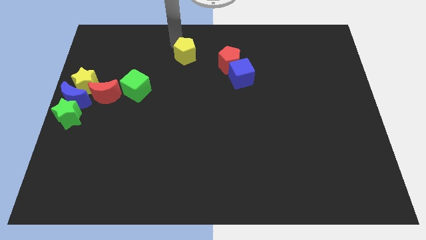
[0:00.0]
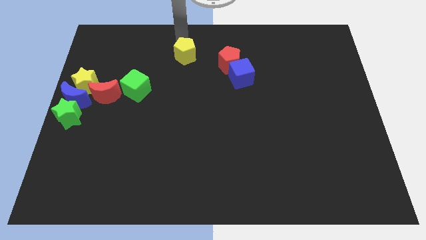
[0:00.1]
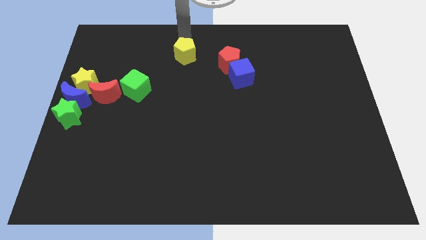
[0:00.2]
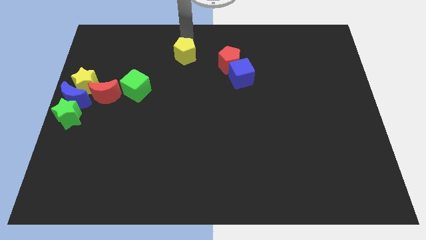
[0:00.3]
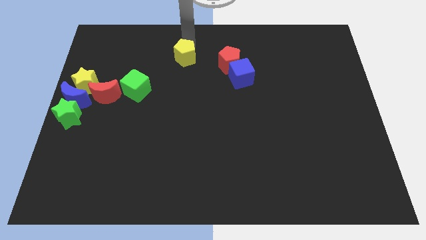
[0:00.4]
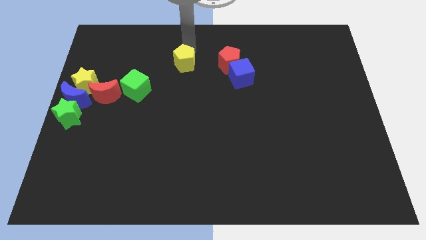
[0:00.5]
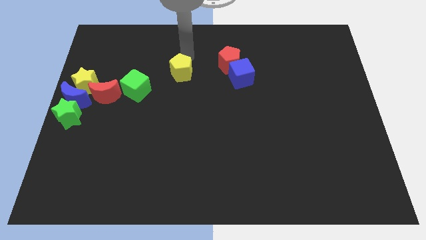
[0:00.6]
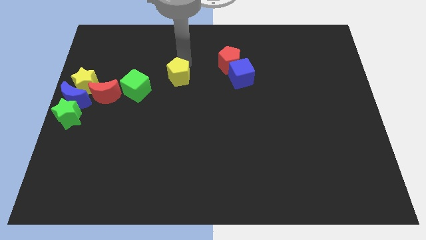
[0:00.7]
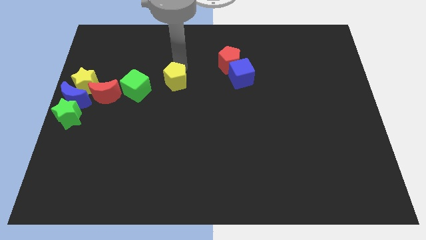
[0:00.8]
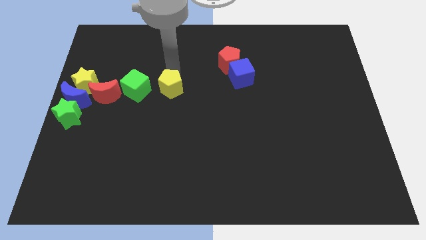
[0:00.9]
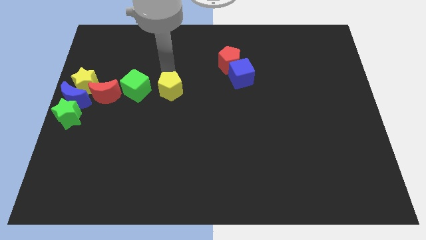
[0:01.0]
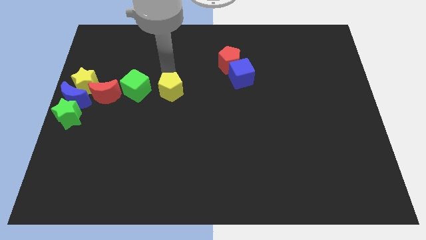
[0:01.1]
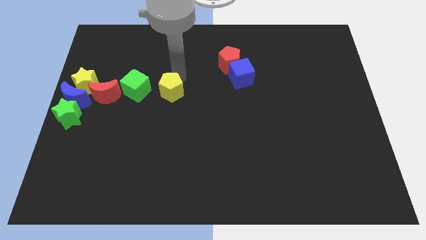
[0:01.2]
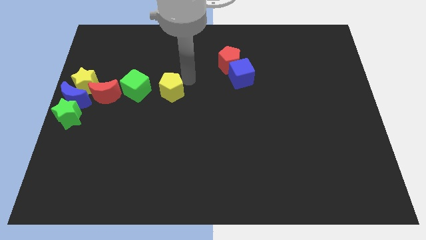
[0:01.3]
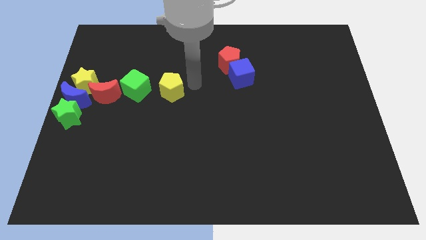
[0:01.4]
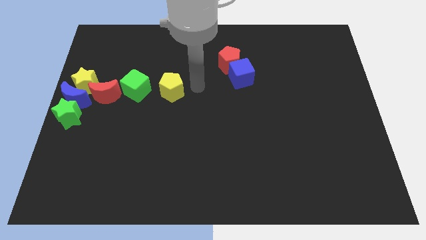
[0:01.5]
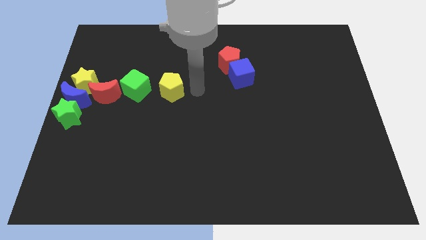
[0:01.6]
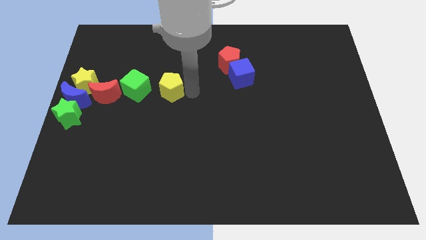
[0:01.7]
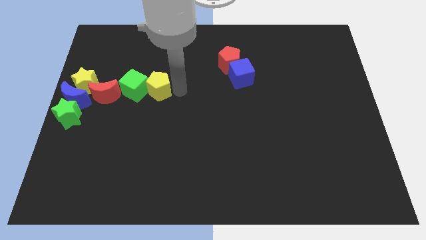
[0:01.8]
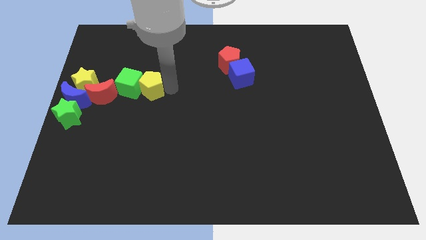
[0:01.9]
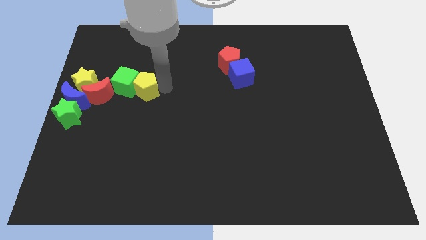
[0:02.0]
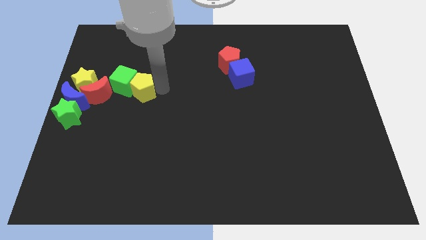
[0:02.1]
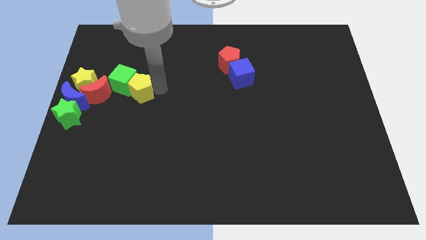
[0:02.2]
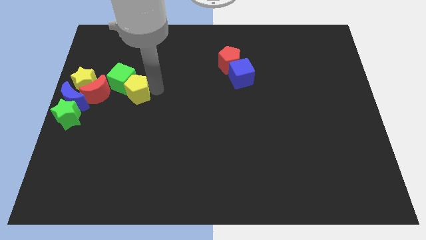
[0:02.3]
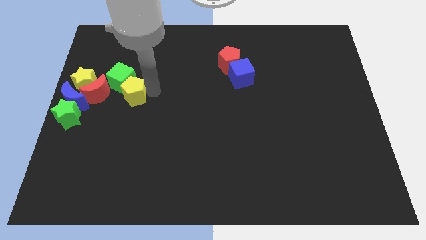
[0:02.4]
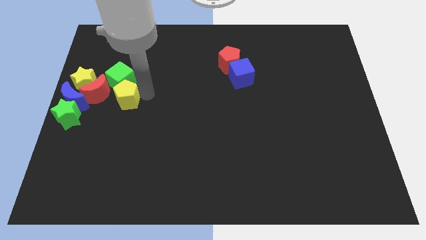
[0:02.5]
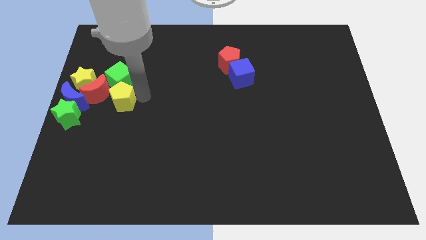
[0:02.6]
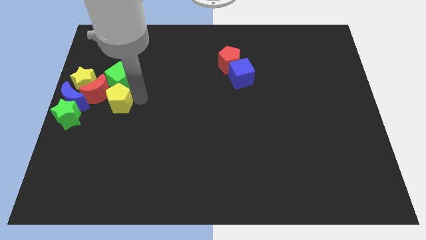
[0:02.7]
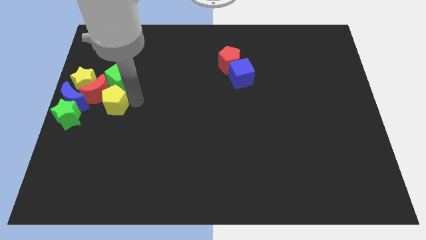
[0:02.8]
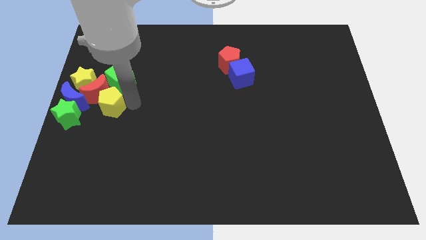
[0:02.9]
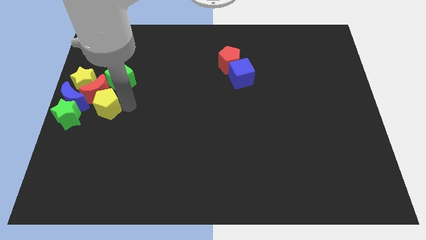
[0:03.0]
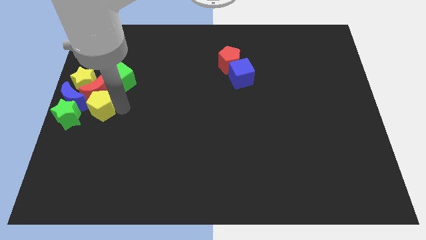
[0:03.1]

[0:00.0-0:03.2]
place the yellow pentagon below to the green cube

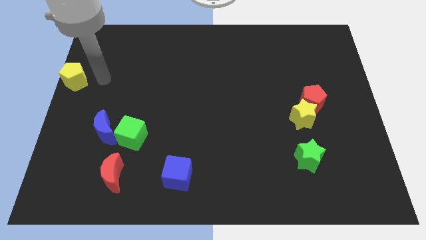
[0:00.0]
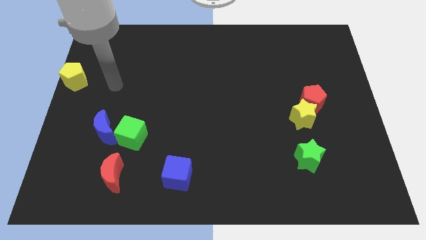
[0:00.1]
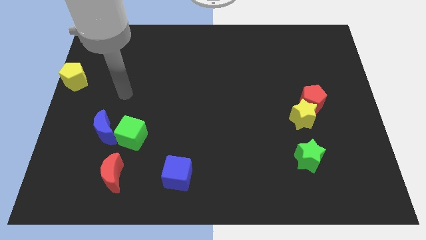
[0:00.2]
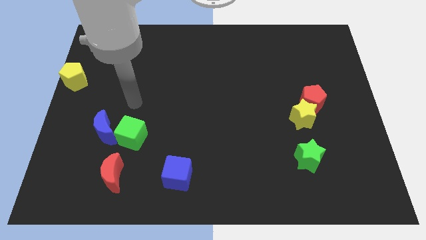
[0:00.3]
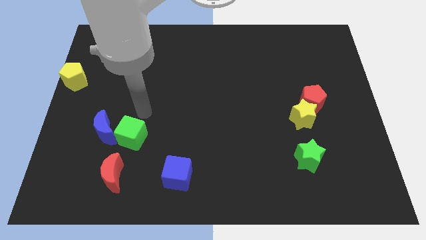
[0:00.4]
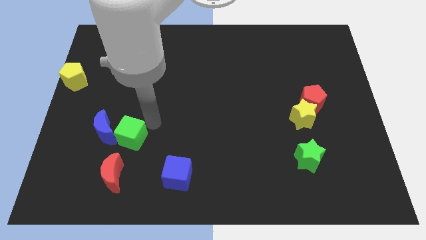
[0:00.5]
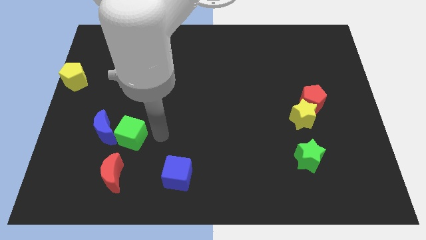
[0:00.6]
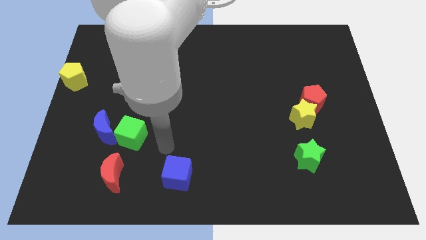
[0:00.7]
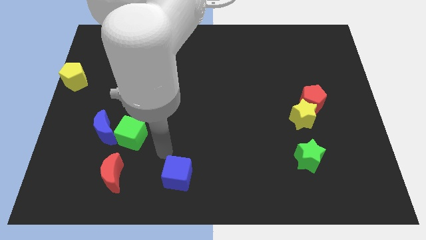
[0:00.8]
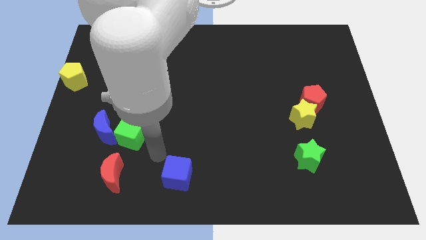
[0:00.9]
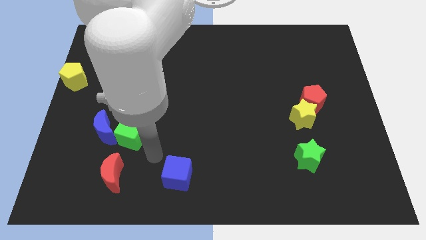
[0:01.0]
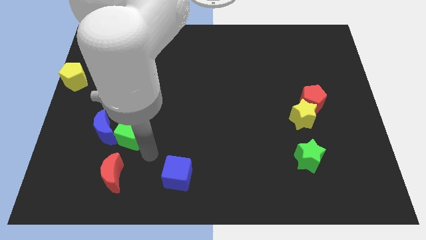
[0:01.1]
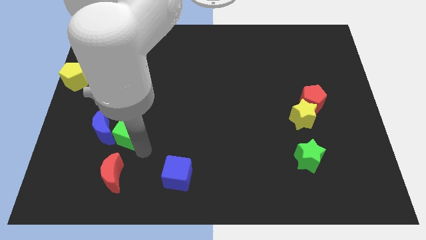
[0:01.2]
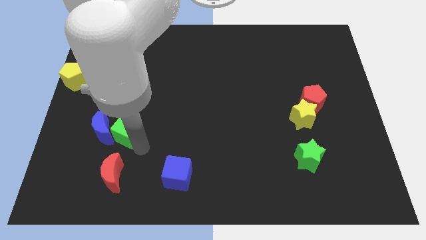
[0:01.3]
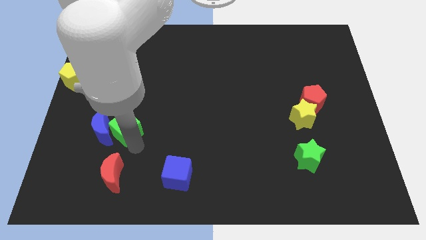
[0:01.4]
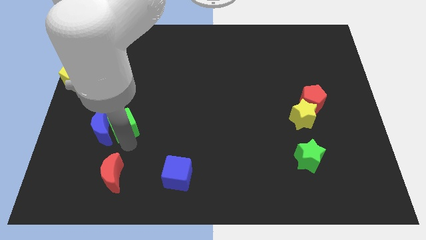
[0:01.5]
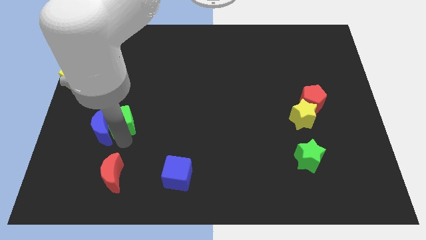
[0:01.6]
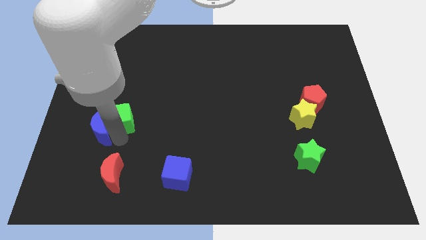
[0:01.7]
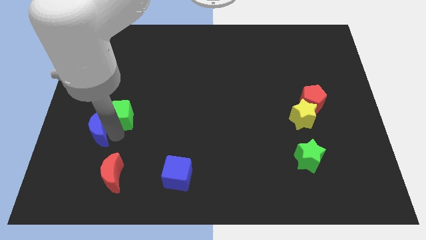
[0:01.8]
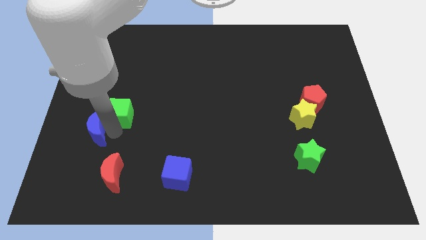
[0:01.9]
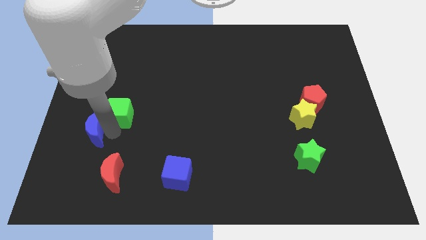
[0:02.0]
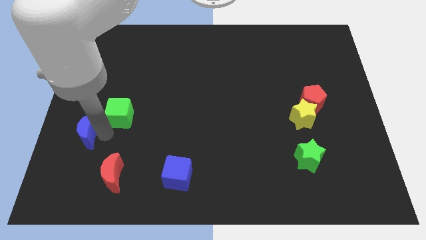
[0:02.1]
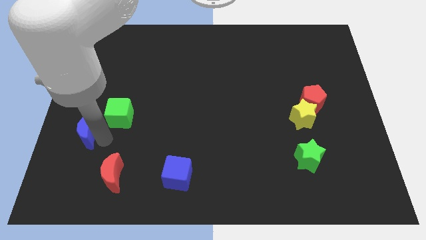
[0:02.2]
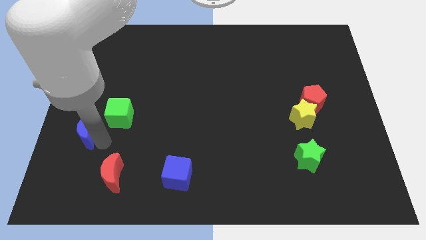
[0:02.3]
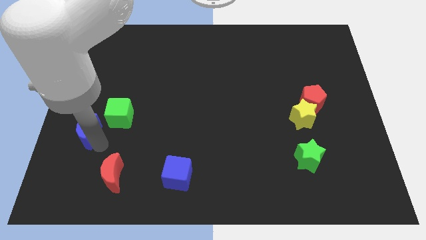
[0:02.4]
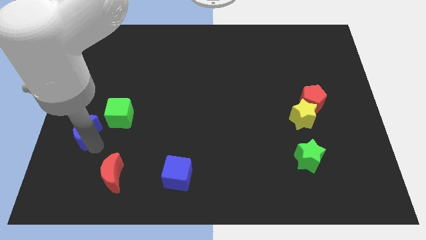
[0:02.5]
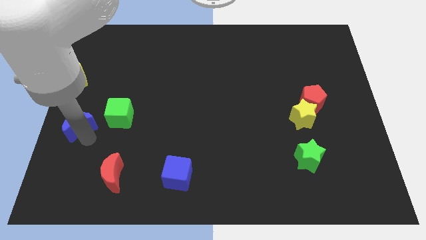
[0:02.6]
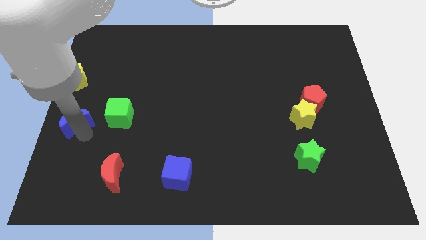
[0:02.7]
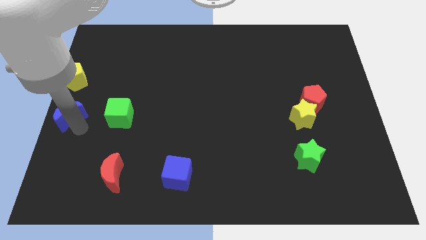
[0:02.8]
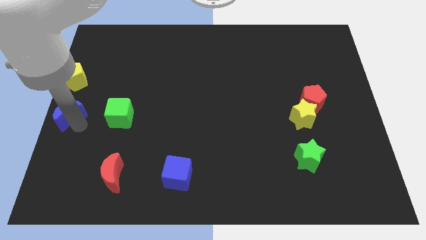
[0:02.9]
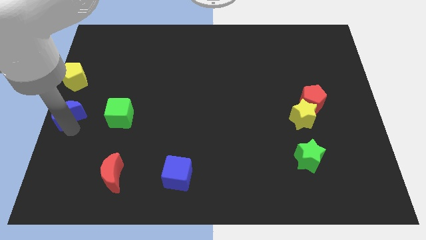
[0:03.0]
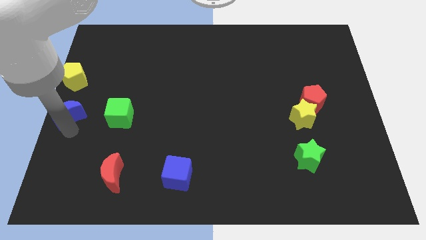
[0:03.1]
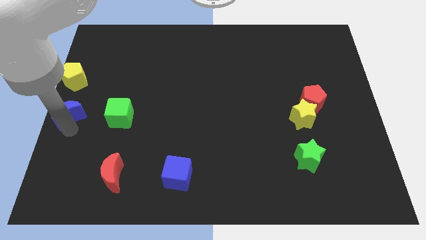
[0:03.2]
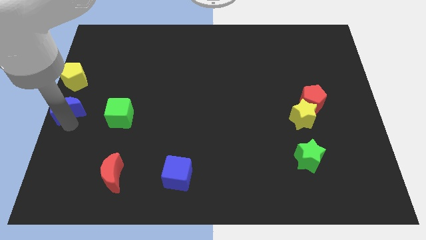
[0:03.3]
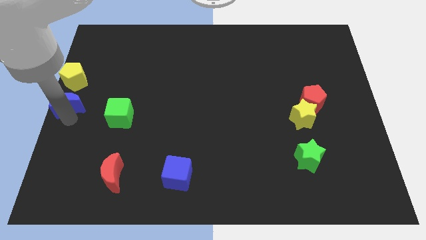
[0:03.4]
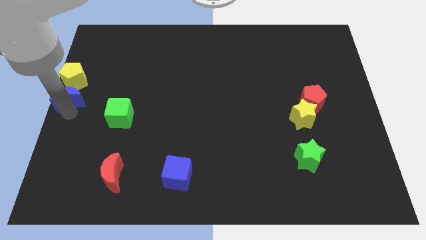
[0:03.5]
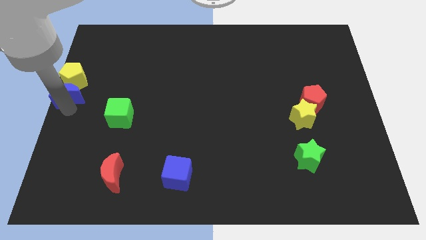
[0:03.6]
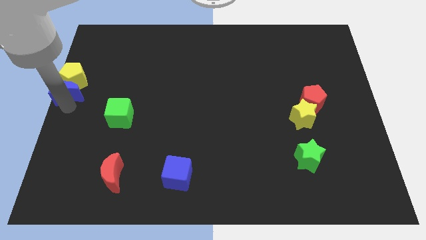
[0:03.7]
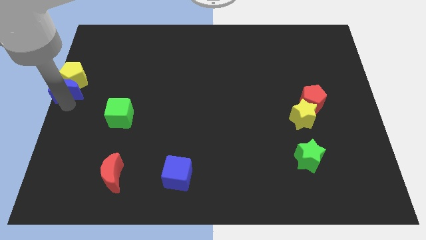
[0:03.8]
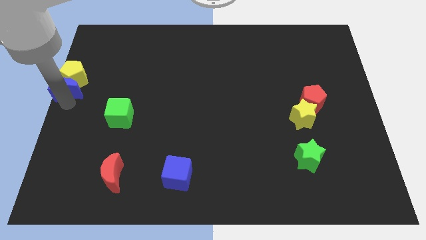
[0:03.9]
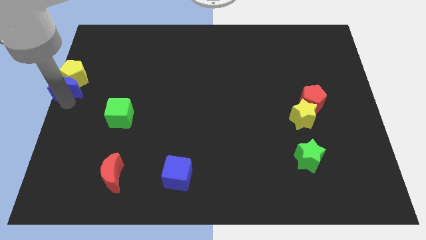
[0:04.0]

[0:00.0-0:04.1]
move blue moon apart from the green cube

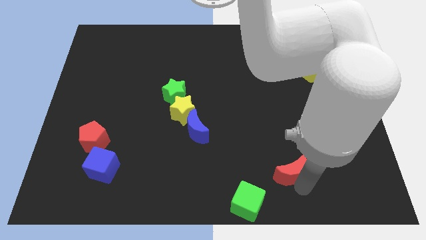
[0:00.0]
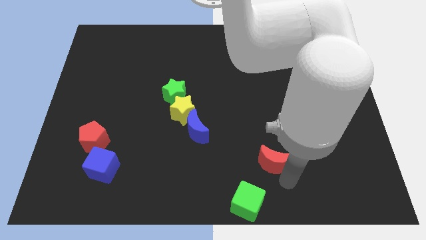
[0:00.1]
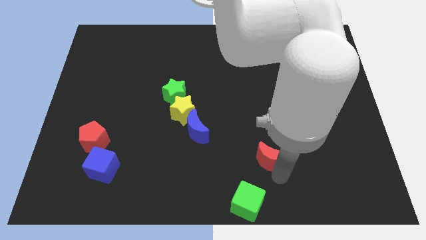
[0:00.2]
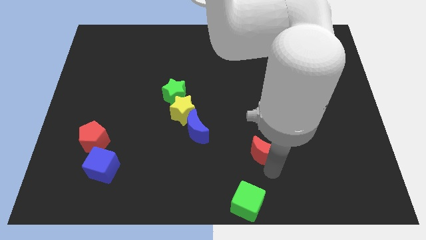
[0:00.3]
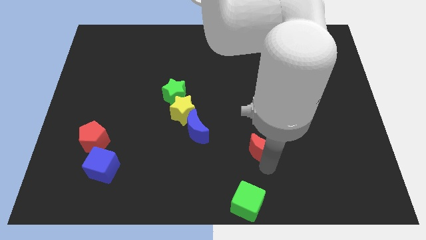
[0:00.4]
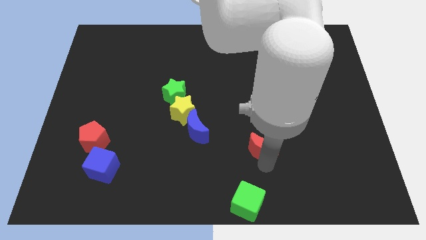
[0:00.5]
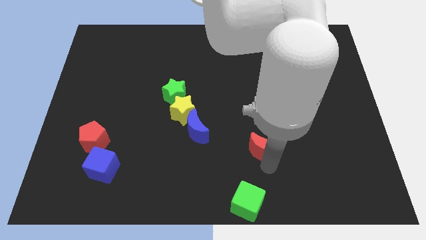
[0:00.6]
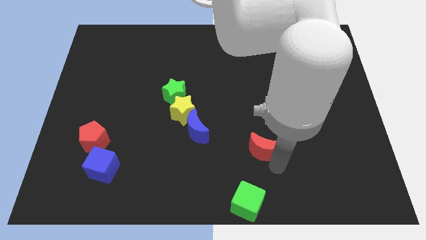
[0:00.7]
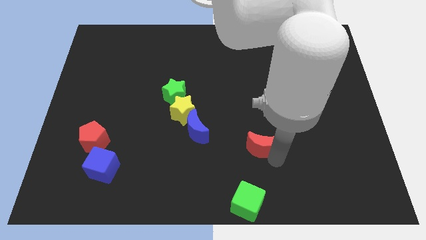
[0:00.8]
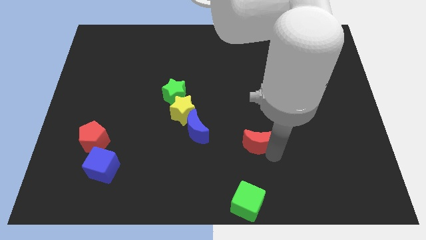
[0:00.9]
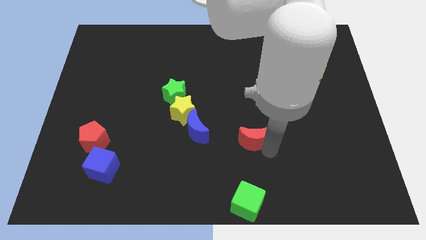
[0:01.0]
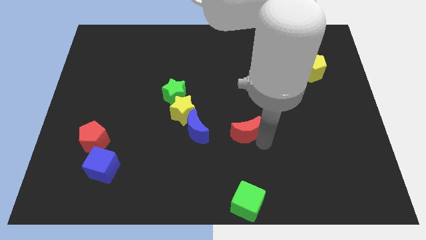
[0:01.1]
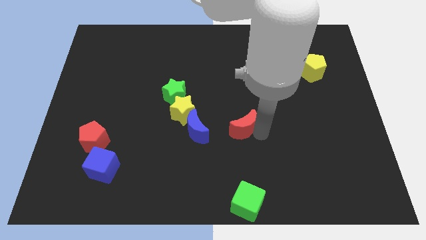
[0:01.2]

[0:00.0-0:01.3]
place red moon to the top of green cube

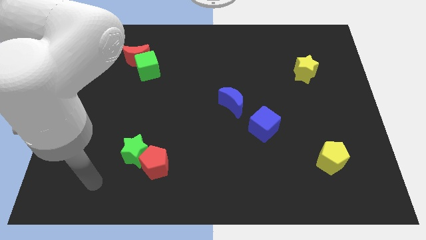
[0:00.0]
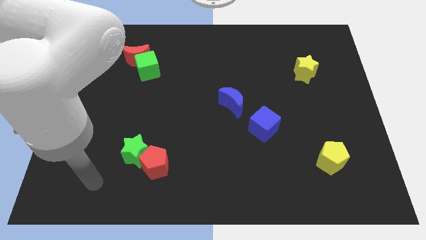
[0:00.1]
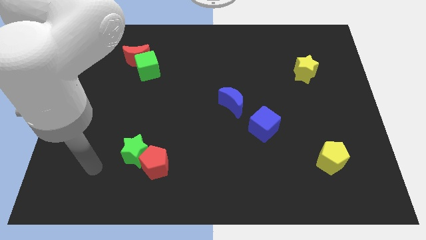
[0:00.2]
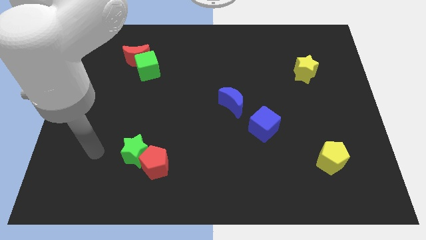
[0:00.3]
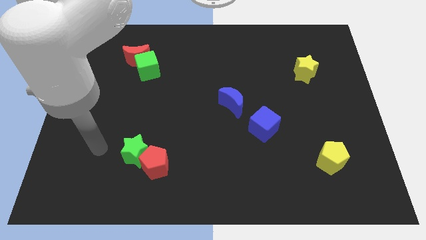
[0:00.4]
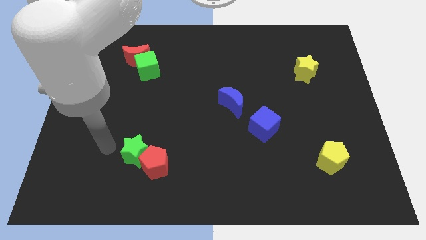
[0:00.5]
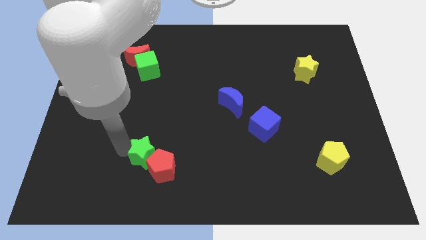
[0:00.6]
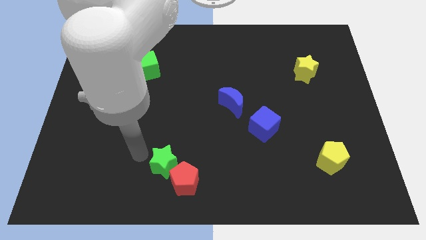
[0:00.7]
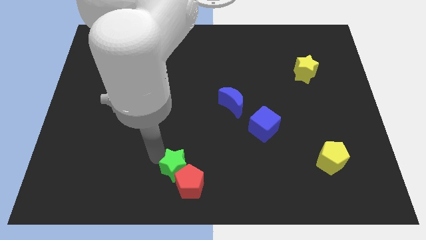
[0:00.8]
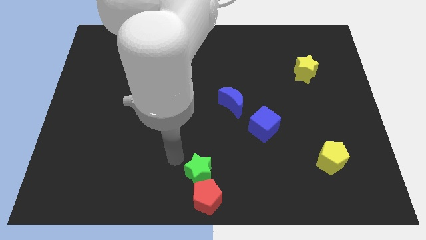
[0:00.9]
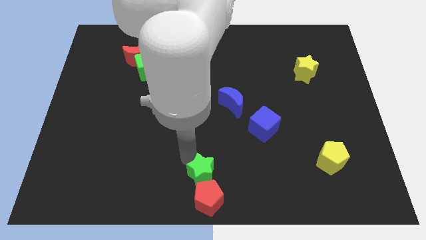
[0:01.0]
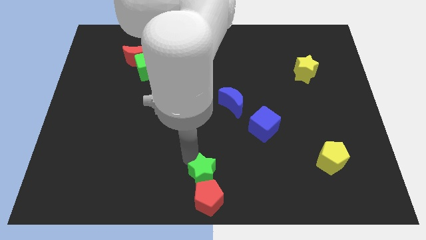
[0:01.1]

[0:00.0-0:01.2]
place the green star and red pentagon together at bottom center of the board
